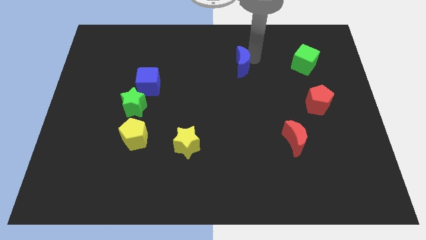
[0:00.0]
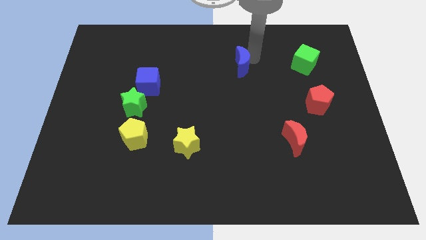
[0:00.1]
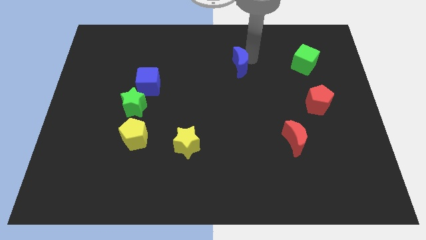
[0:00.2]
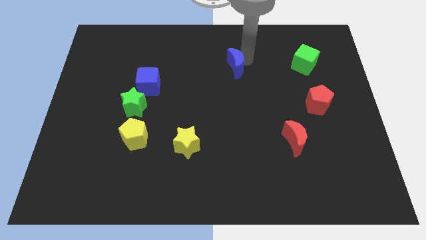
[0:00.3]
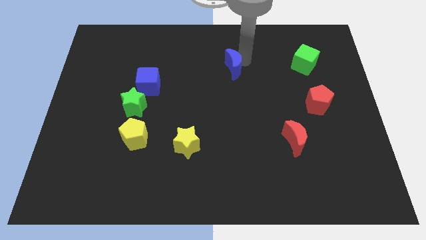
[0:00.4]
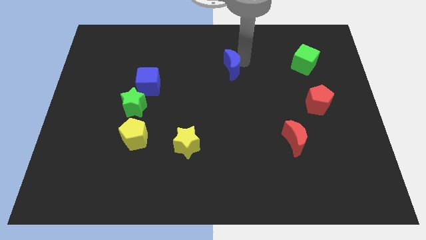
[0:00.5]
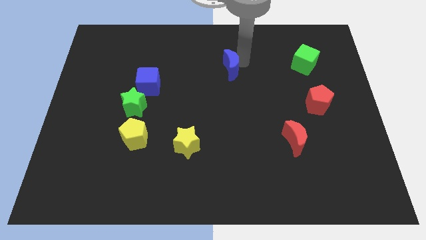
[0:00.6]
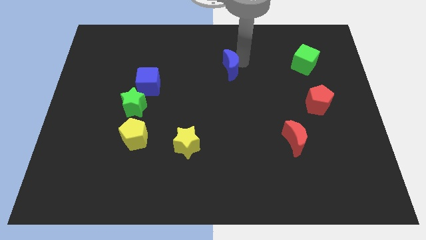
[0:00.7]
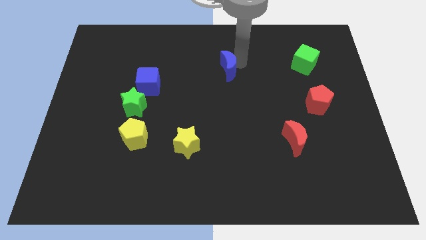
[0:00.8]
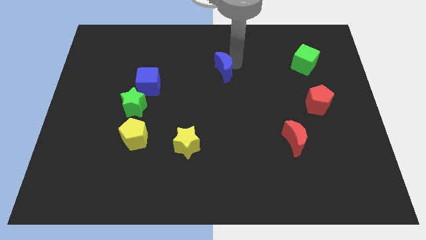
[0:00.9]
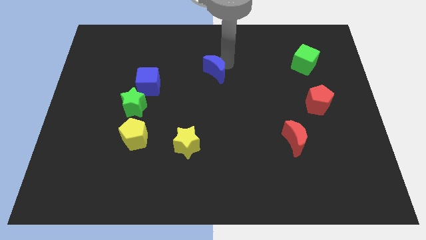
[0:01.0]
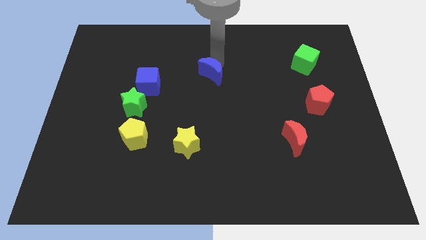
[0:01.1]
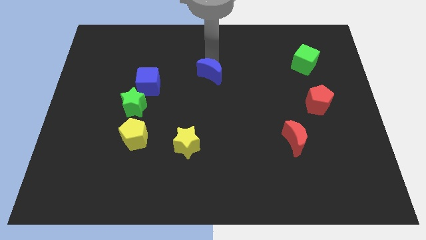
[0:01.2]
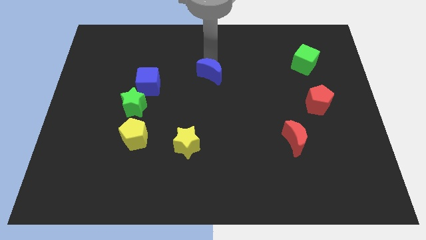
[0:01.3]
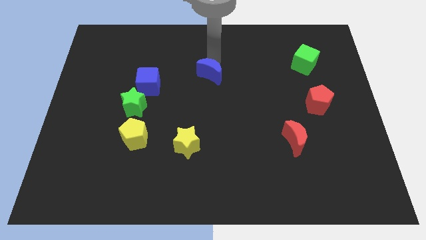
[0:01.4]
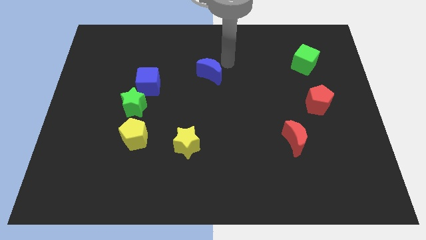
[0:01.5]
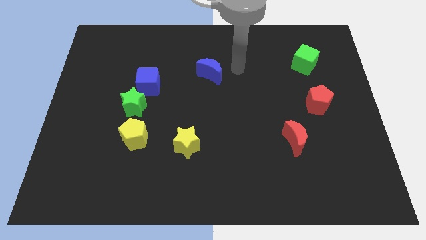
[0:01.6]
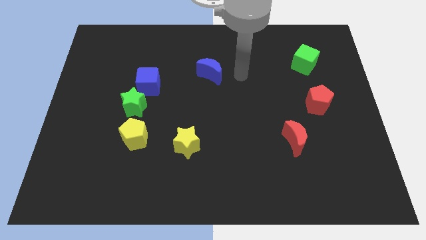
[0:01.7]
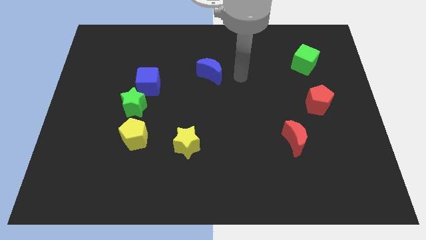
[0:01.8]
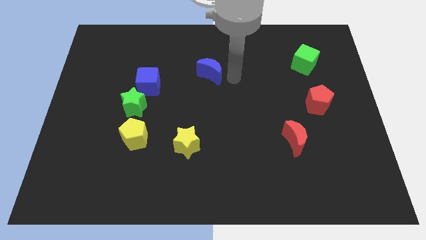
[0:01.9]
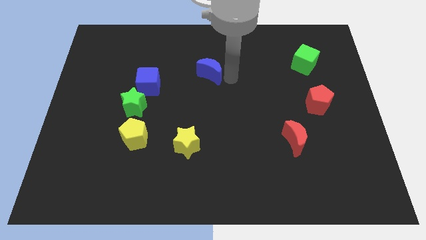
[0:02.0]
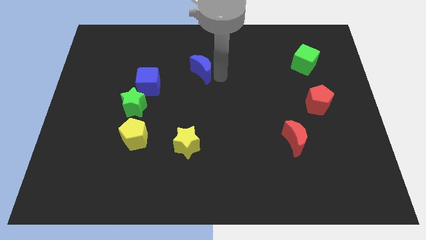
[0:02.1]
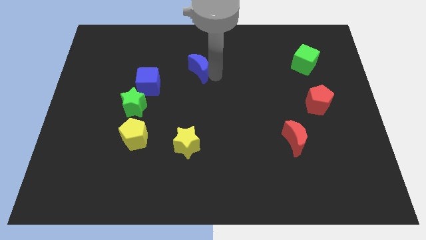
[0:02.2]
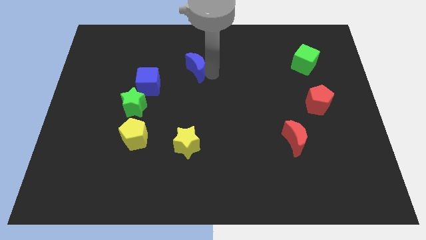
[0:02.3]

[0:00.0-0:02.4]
push the blue moon towards the blue cube

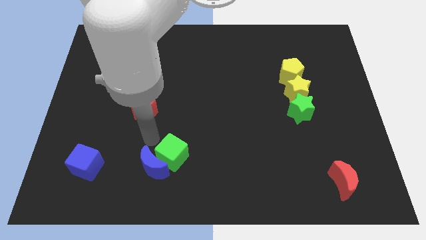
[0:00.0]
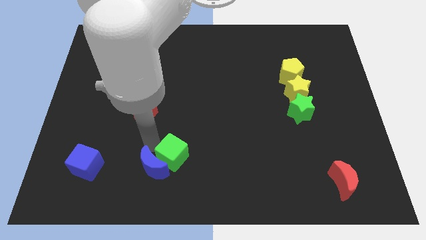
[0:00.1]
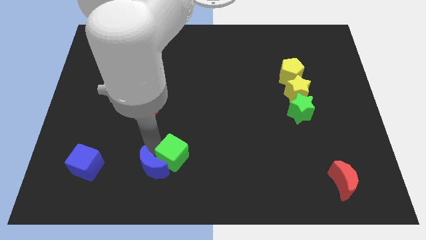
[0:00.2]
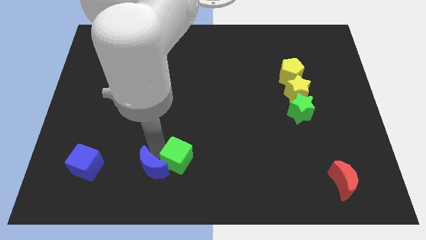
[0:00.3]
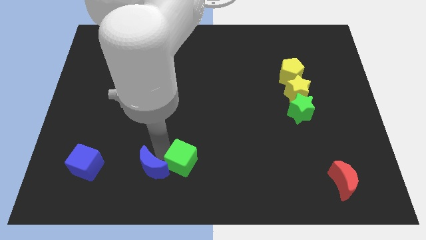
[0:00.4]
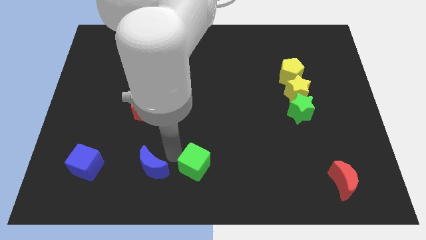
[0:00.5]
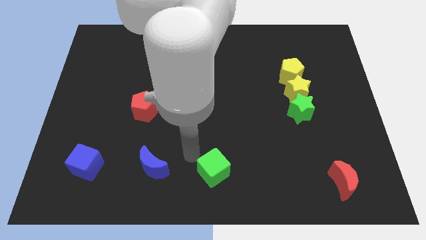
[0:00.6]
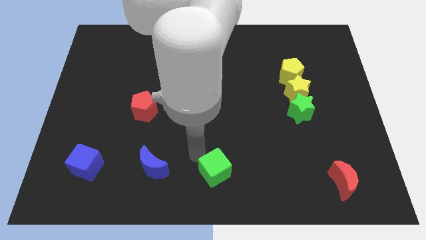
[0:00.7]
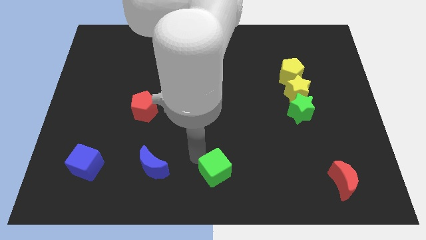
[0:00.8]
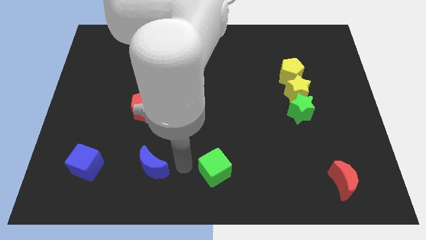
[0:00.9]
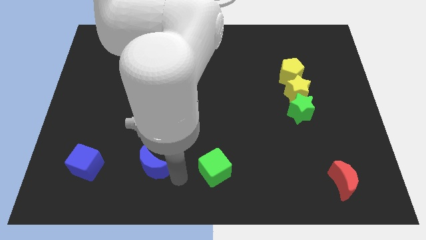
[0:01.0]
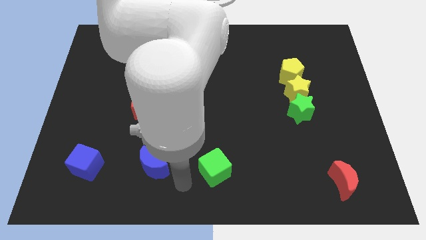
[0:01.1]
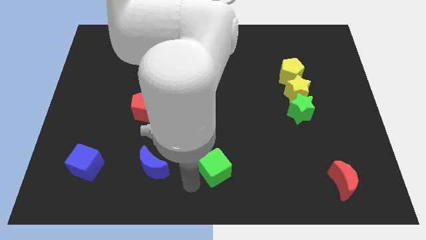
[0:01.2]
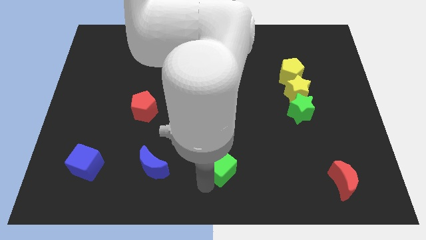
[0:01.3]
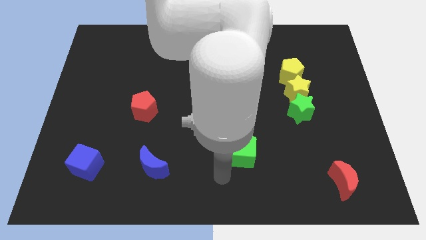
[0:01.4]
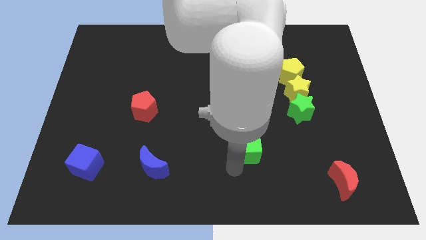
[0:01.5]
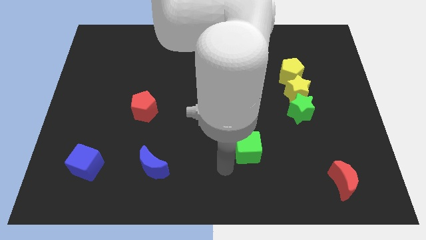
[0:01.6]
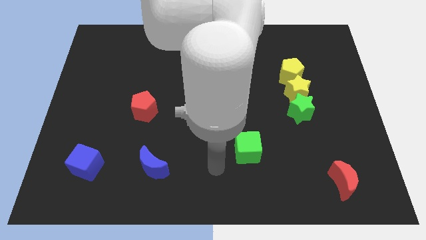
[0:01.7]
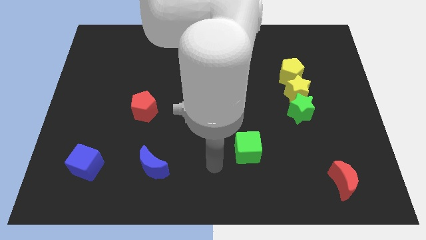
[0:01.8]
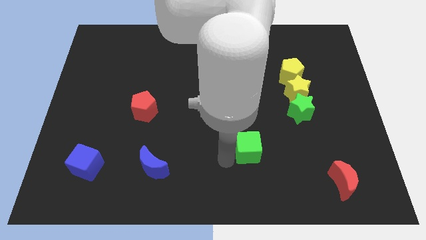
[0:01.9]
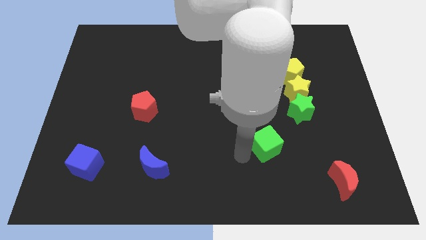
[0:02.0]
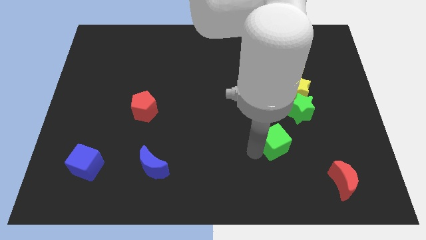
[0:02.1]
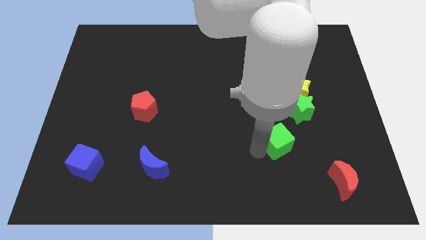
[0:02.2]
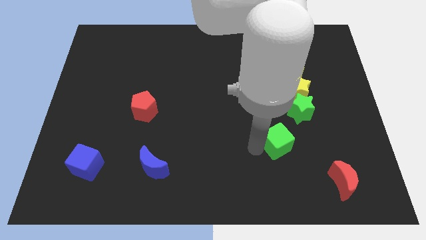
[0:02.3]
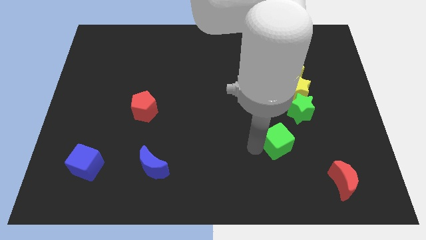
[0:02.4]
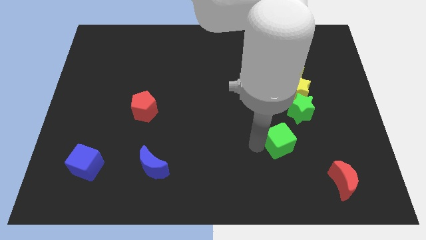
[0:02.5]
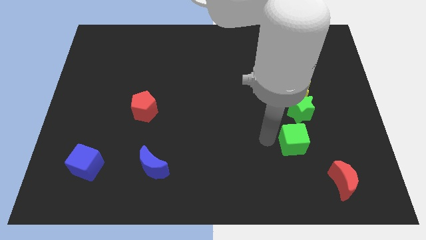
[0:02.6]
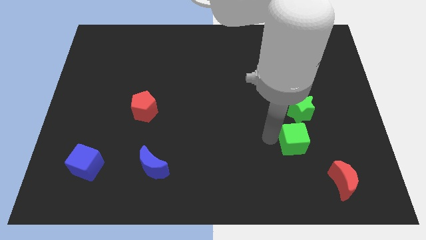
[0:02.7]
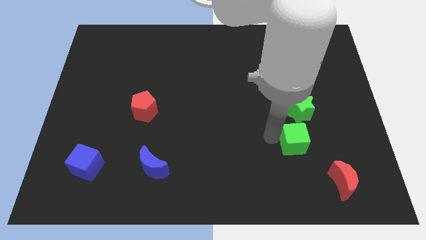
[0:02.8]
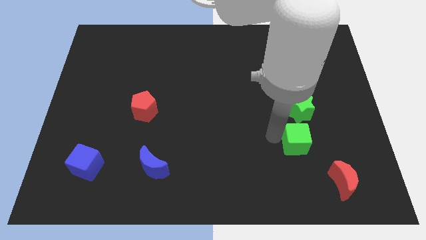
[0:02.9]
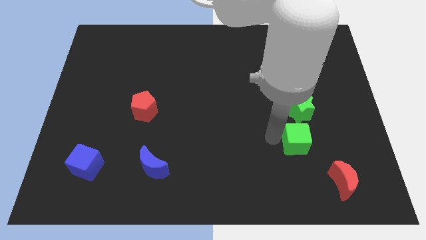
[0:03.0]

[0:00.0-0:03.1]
move the green cube towards the bottom of the green star

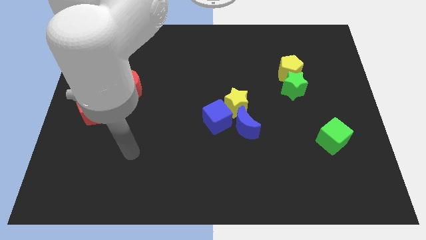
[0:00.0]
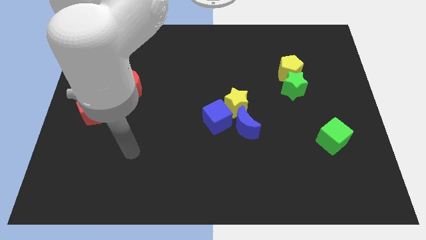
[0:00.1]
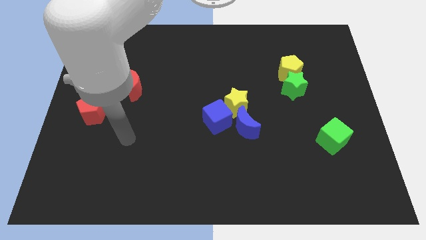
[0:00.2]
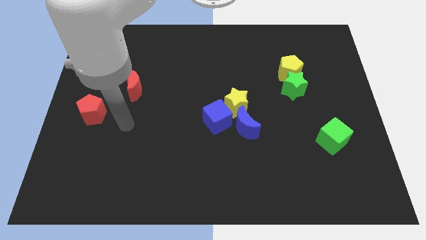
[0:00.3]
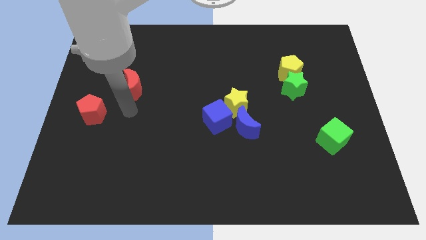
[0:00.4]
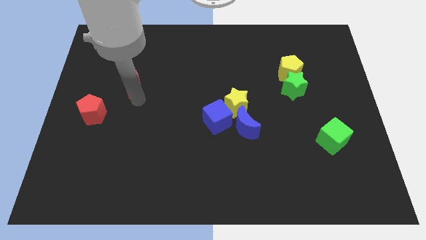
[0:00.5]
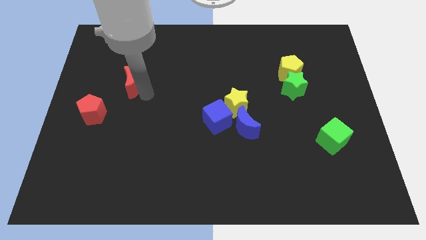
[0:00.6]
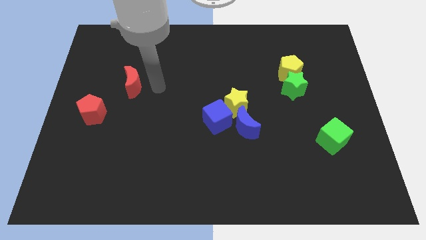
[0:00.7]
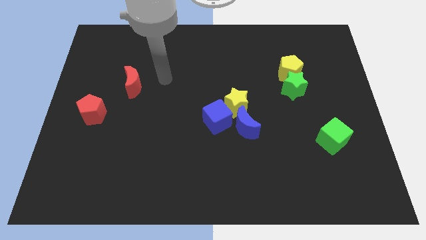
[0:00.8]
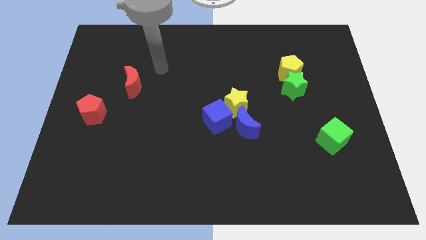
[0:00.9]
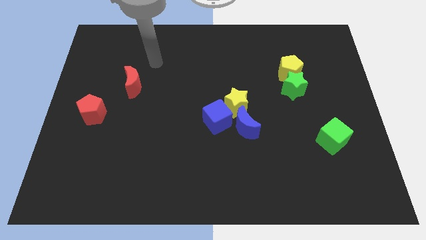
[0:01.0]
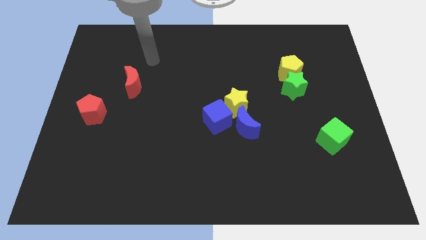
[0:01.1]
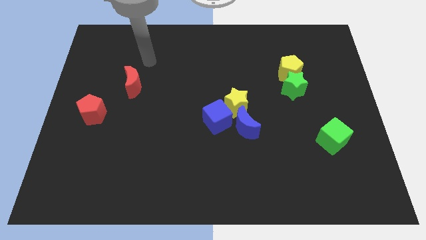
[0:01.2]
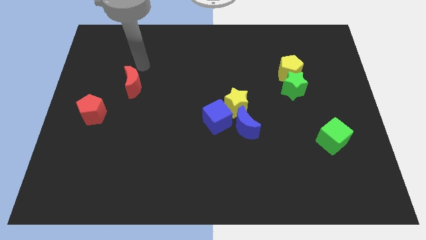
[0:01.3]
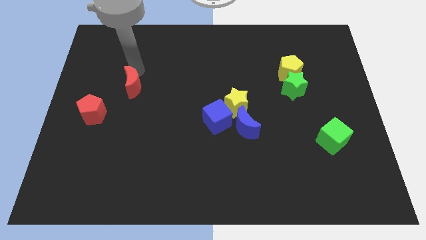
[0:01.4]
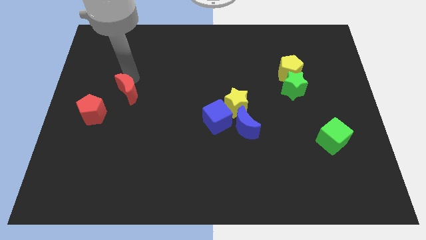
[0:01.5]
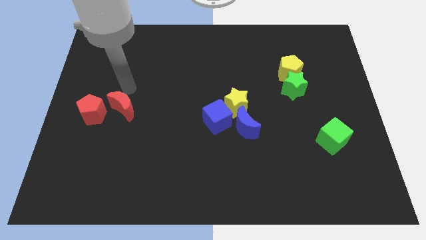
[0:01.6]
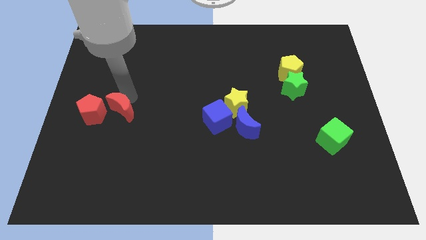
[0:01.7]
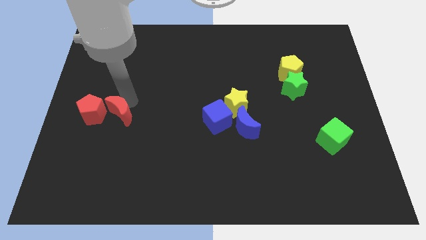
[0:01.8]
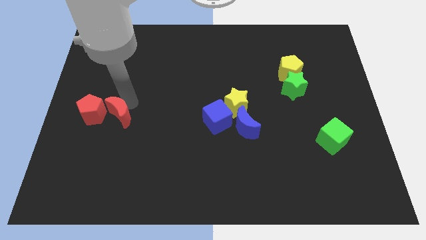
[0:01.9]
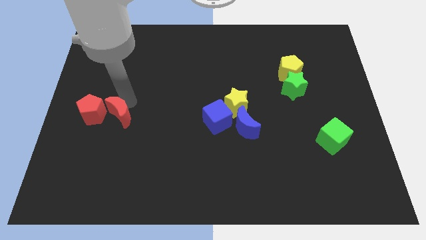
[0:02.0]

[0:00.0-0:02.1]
move the red crescent toward the right side of the red pentagon

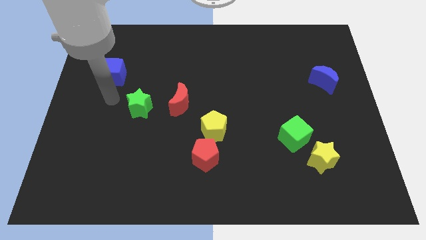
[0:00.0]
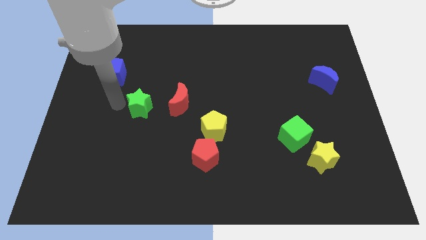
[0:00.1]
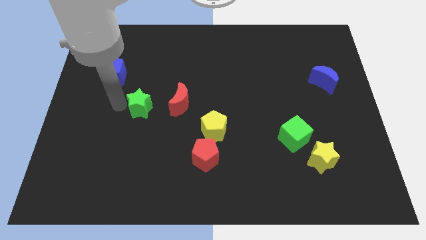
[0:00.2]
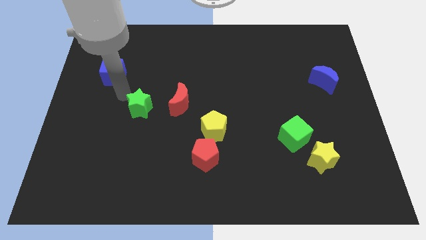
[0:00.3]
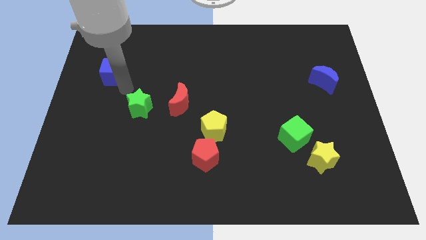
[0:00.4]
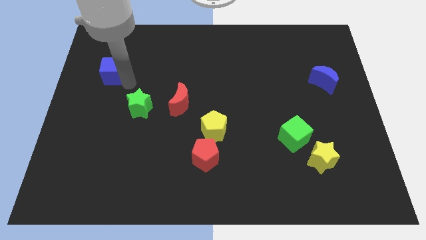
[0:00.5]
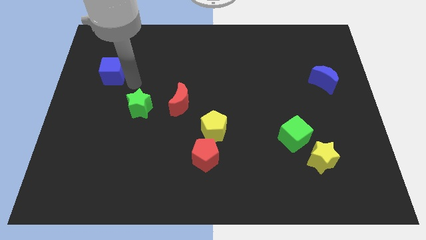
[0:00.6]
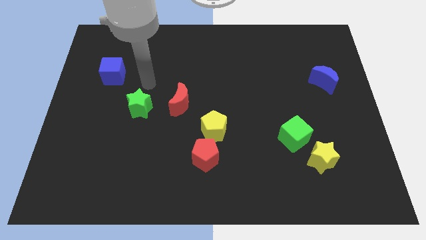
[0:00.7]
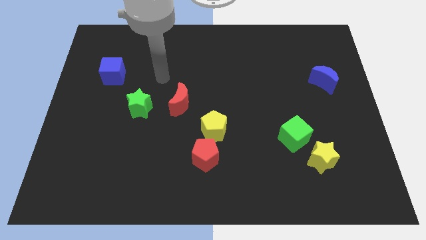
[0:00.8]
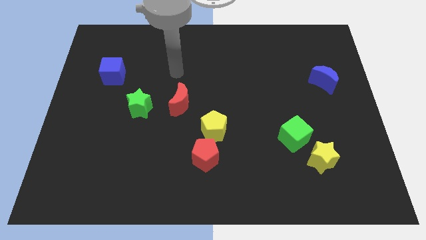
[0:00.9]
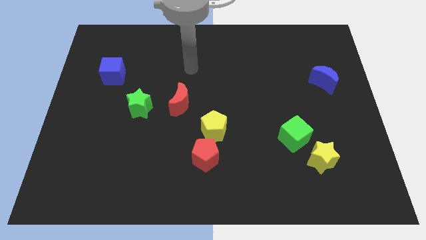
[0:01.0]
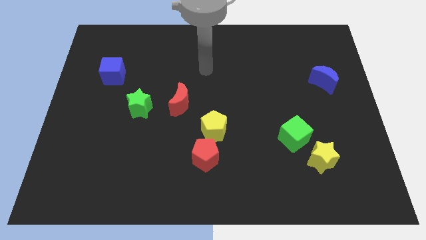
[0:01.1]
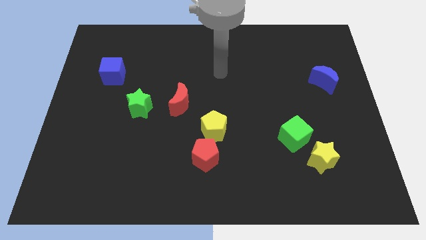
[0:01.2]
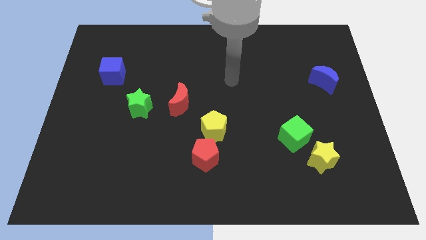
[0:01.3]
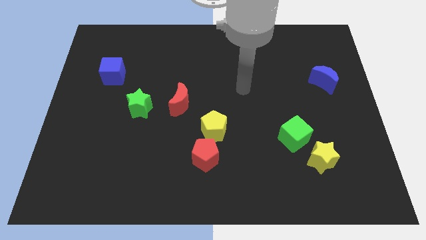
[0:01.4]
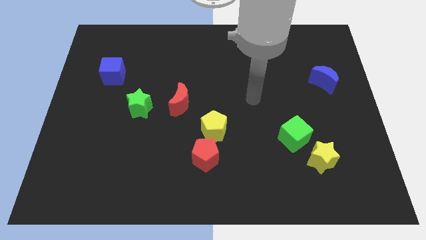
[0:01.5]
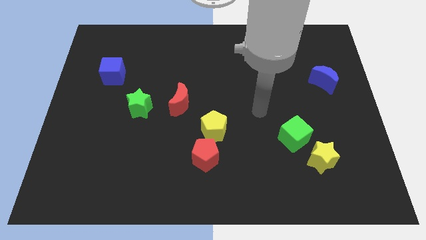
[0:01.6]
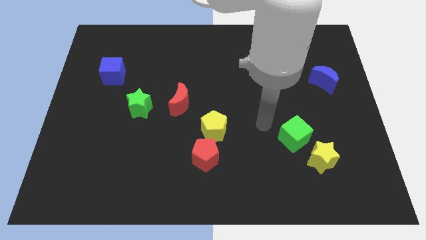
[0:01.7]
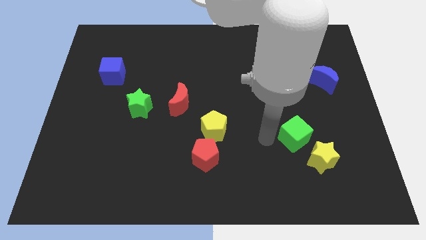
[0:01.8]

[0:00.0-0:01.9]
place your arm at the left of the green cube
